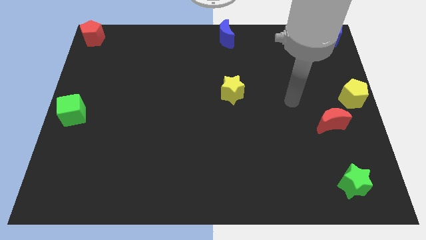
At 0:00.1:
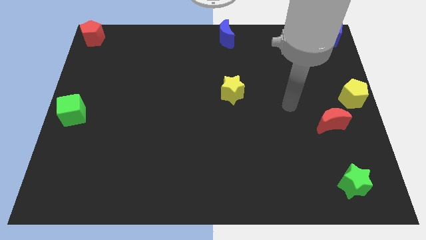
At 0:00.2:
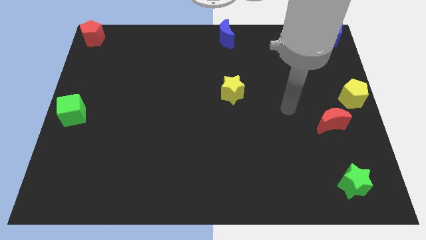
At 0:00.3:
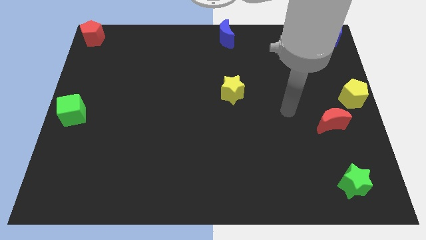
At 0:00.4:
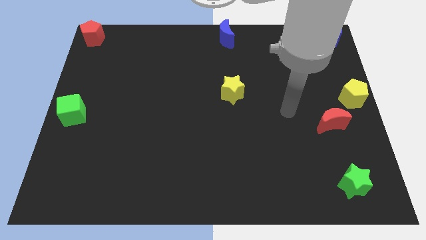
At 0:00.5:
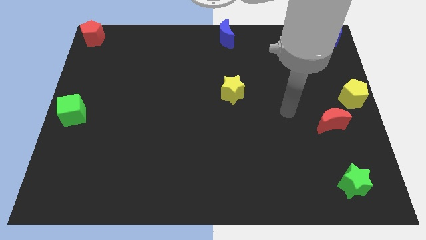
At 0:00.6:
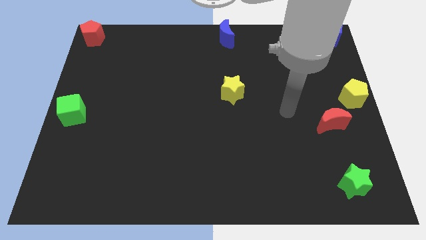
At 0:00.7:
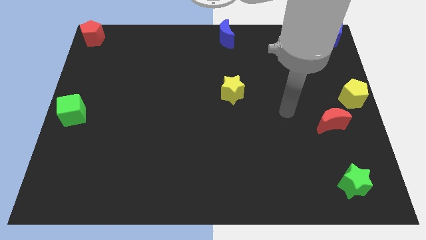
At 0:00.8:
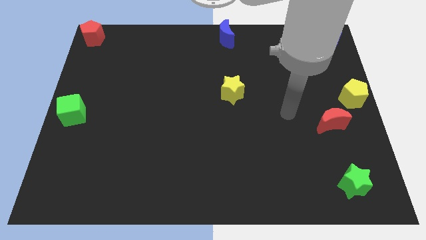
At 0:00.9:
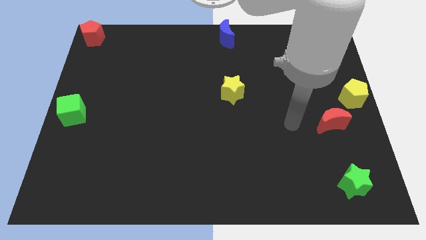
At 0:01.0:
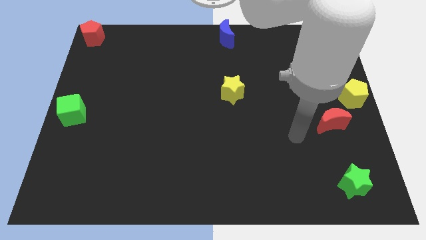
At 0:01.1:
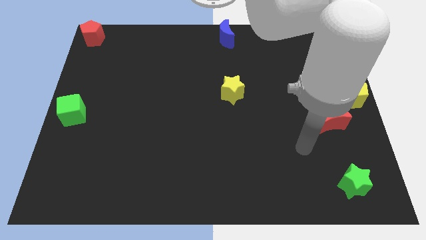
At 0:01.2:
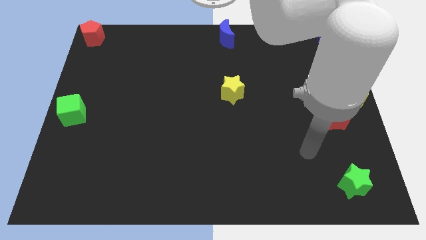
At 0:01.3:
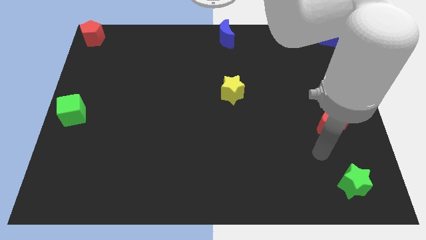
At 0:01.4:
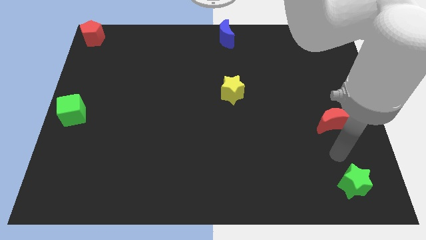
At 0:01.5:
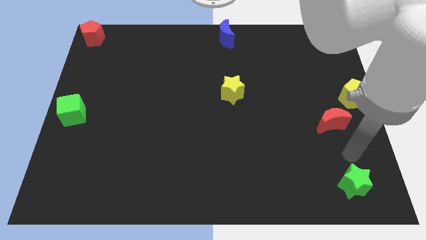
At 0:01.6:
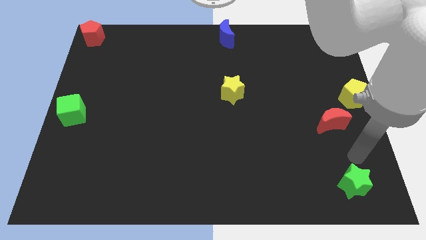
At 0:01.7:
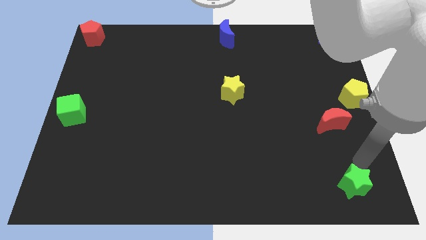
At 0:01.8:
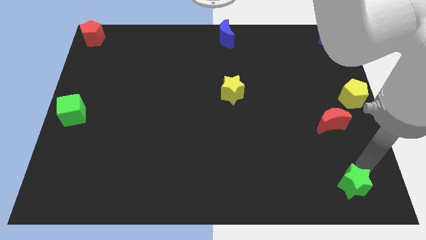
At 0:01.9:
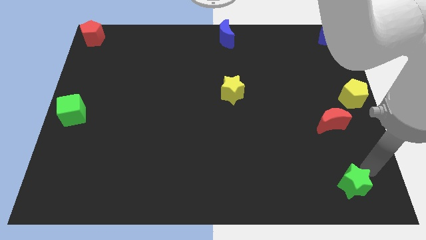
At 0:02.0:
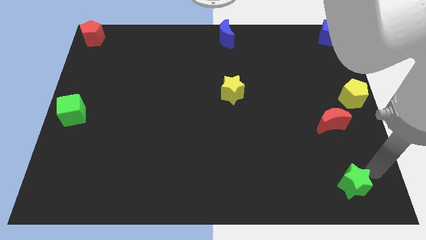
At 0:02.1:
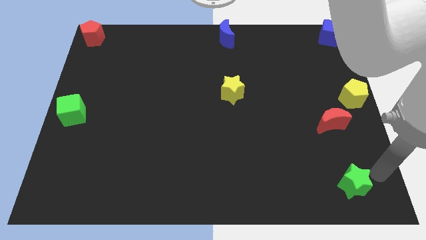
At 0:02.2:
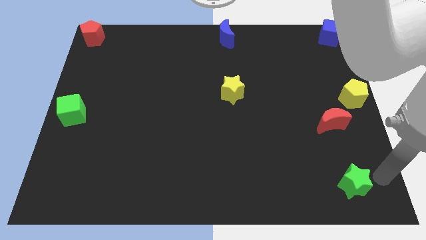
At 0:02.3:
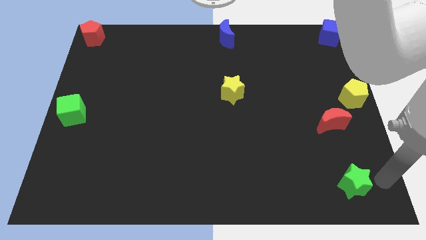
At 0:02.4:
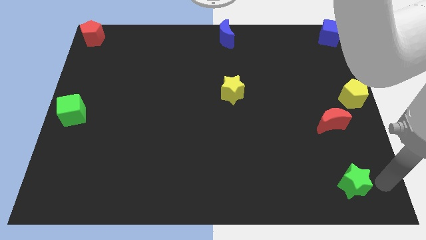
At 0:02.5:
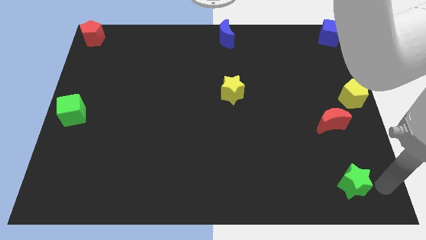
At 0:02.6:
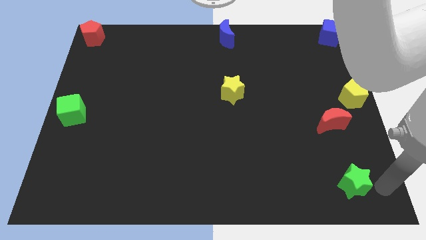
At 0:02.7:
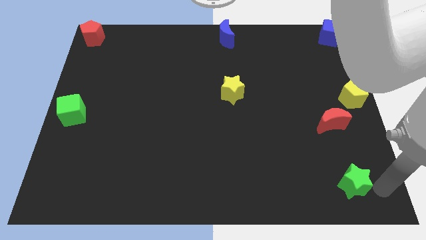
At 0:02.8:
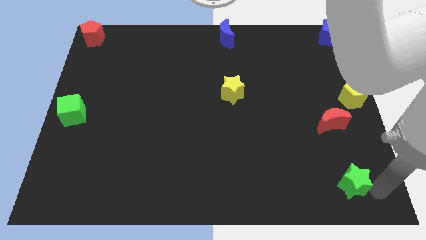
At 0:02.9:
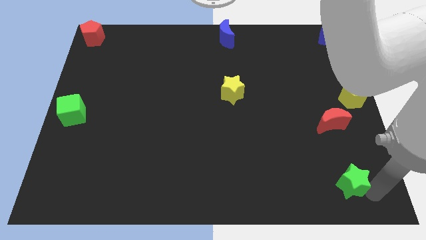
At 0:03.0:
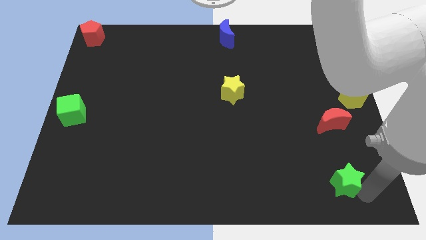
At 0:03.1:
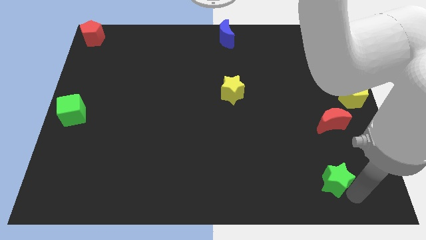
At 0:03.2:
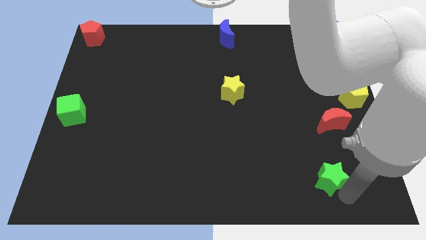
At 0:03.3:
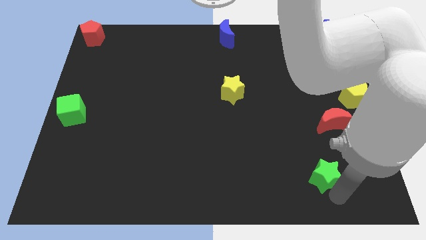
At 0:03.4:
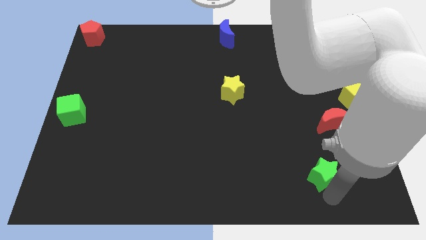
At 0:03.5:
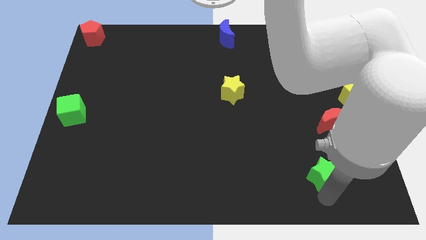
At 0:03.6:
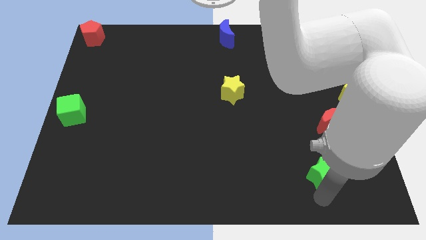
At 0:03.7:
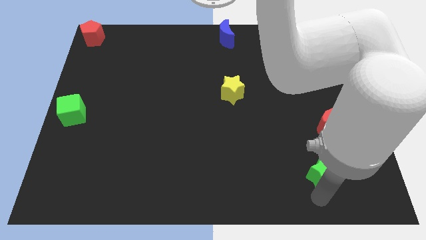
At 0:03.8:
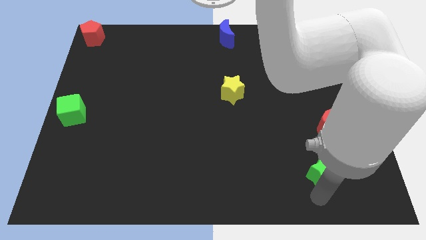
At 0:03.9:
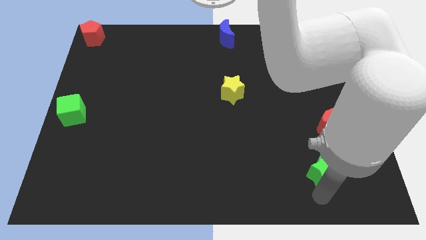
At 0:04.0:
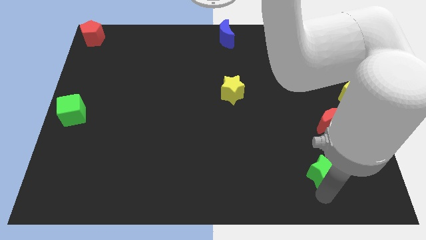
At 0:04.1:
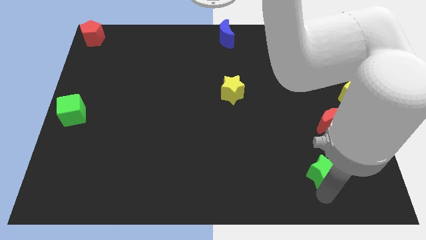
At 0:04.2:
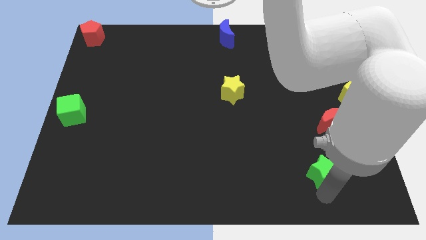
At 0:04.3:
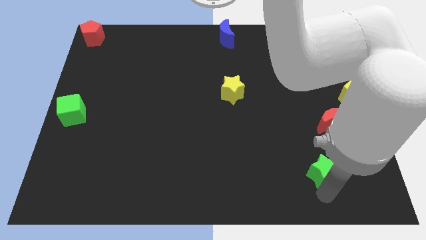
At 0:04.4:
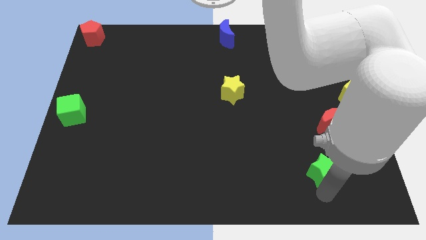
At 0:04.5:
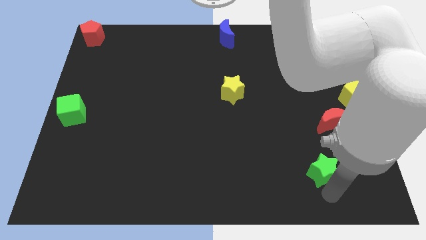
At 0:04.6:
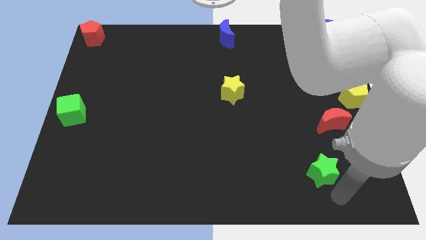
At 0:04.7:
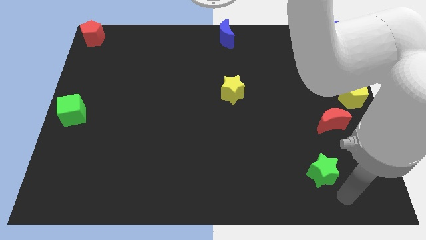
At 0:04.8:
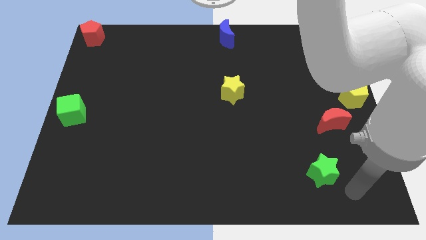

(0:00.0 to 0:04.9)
move your arm towards the green star

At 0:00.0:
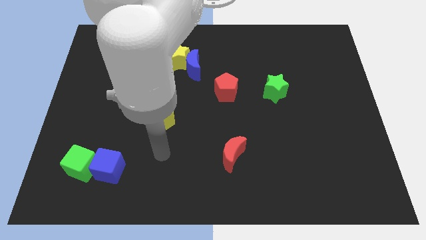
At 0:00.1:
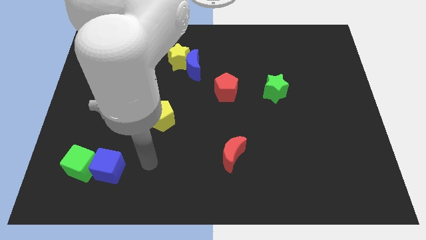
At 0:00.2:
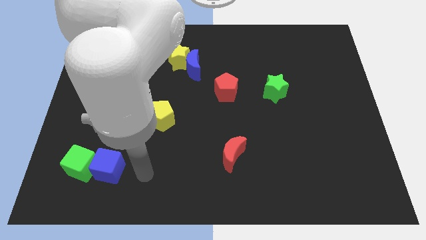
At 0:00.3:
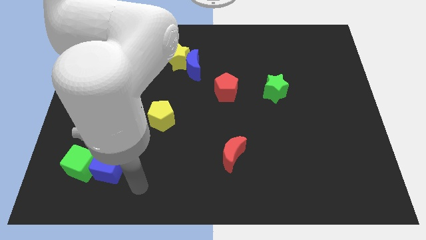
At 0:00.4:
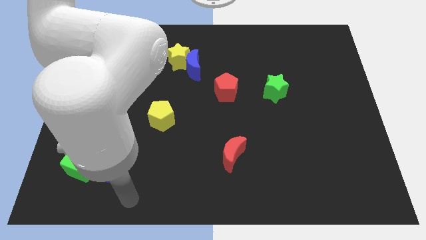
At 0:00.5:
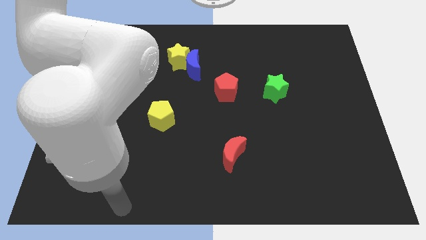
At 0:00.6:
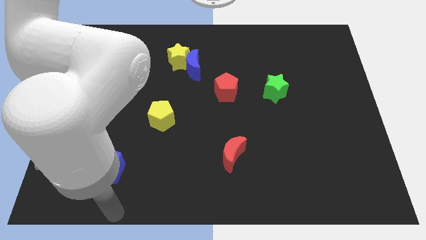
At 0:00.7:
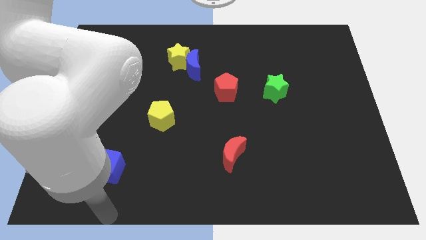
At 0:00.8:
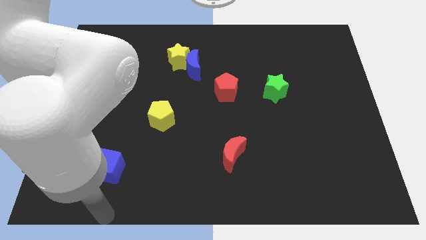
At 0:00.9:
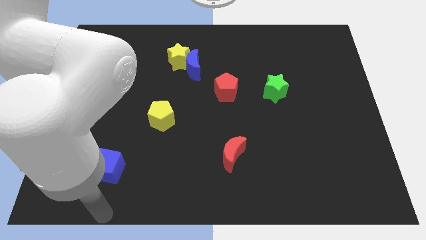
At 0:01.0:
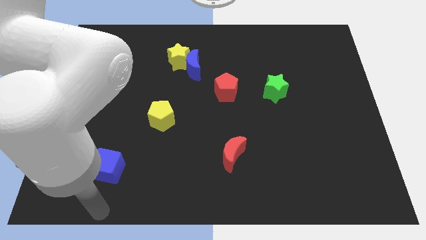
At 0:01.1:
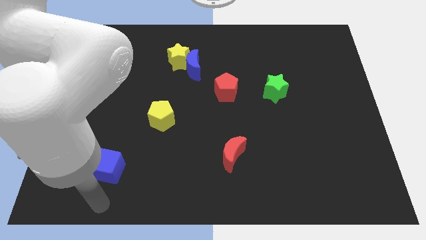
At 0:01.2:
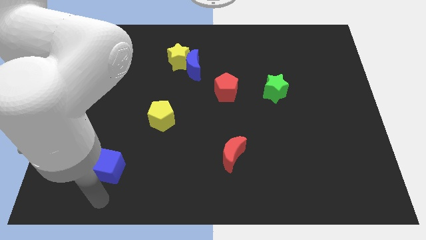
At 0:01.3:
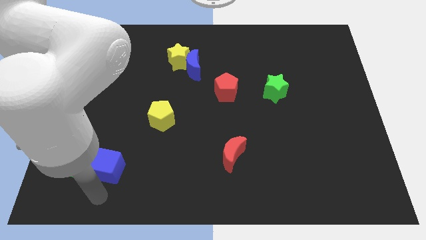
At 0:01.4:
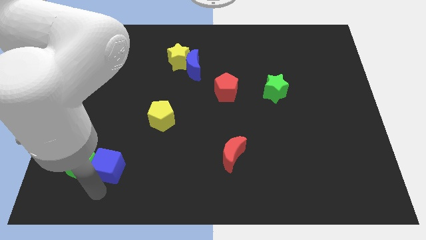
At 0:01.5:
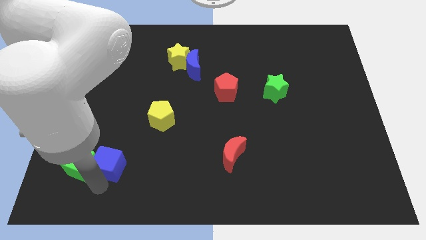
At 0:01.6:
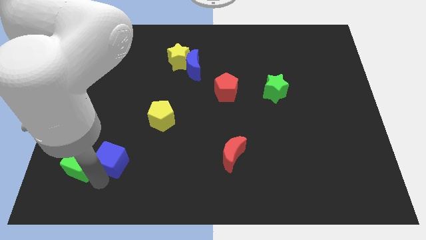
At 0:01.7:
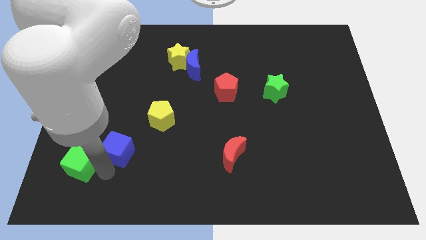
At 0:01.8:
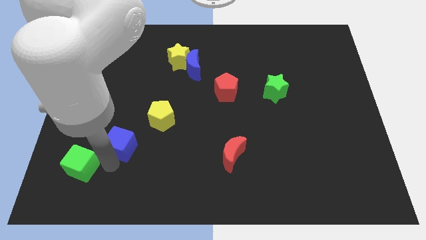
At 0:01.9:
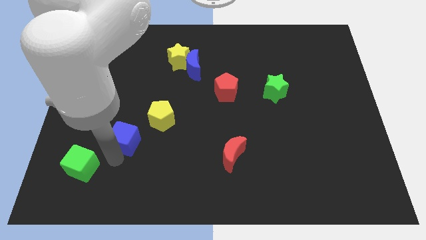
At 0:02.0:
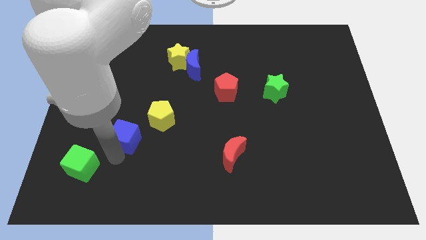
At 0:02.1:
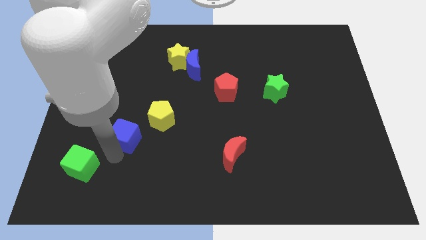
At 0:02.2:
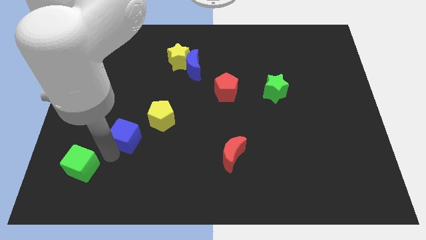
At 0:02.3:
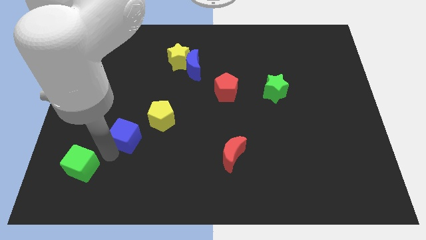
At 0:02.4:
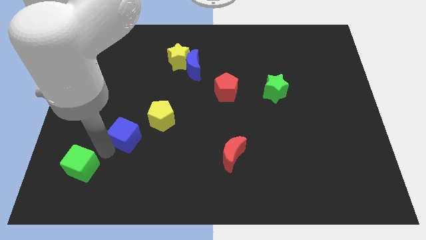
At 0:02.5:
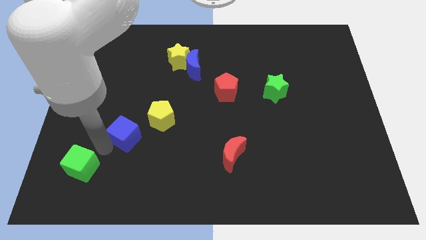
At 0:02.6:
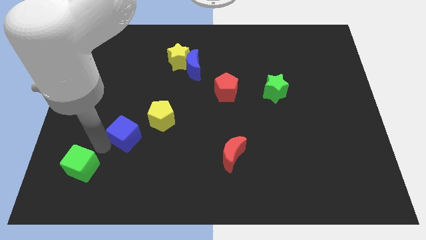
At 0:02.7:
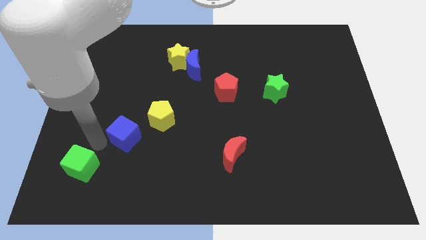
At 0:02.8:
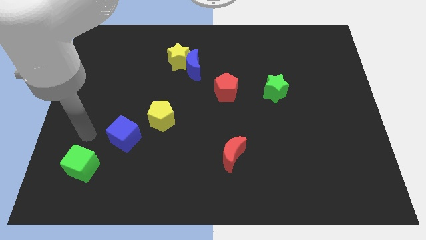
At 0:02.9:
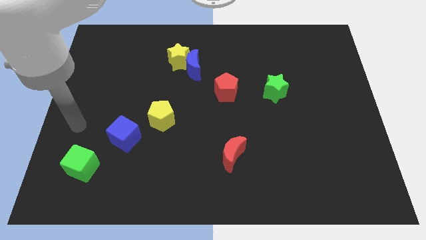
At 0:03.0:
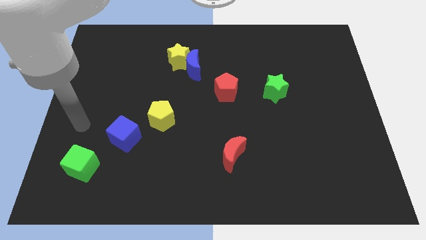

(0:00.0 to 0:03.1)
place the blue cube in between the yellow pentagon and green cube

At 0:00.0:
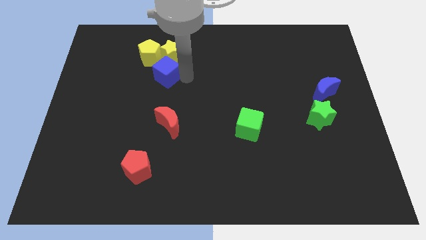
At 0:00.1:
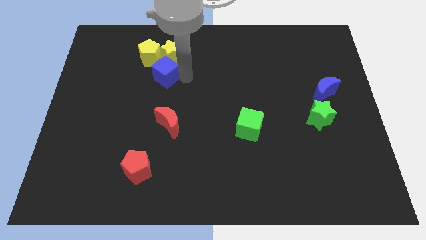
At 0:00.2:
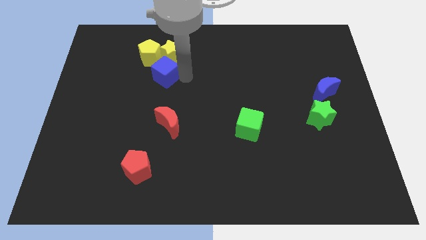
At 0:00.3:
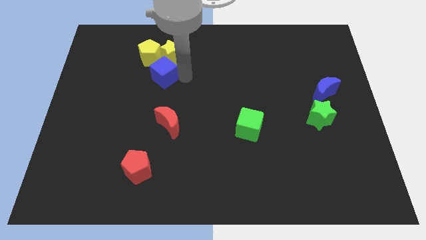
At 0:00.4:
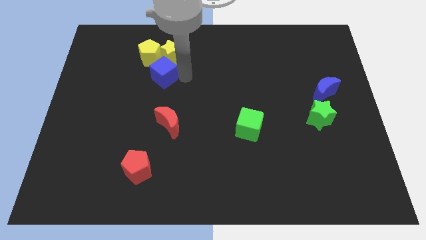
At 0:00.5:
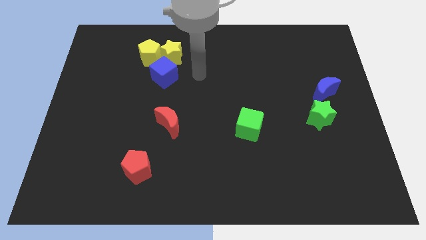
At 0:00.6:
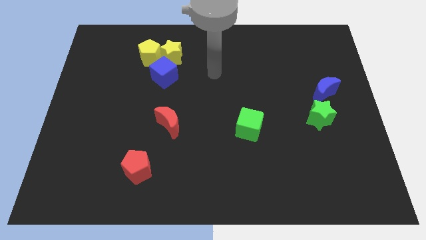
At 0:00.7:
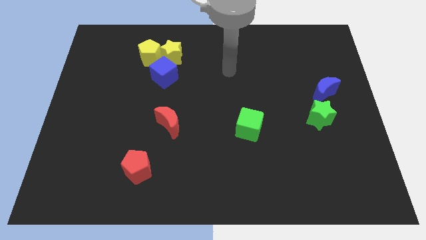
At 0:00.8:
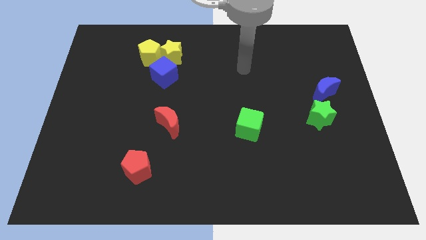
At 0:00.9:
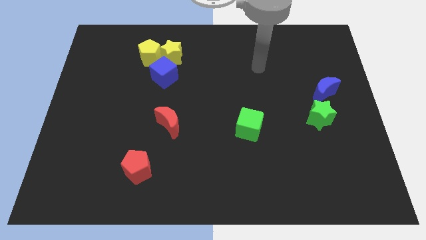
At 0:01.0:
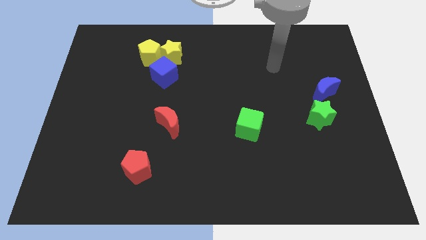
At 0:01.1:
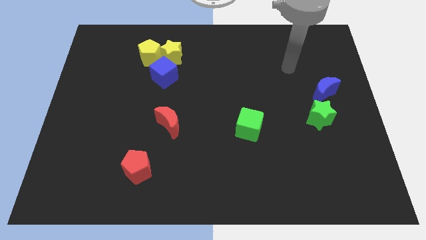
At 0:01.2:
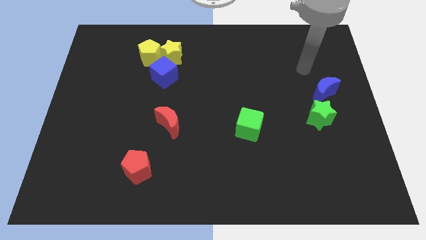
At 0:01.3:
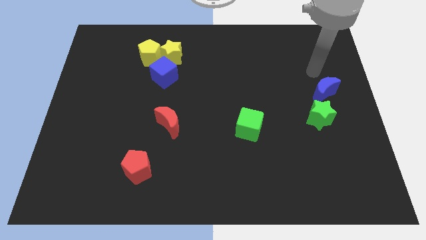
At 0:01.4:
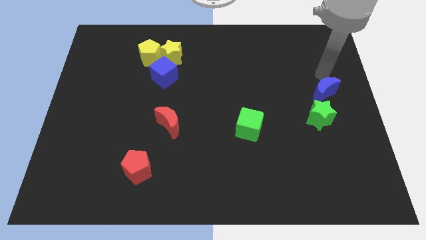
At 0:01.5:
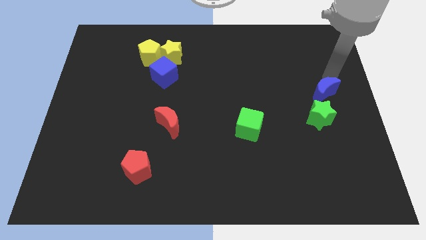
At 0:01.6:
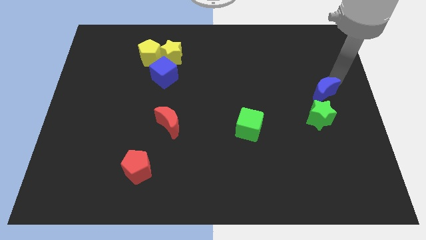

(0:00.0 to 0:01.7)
move your arm above the blue moon
